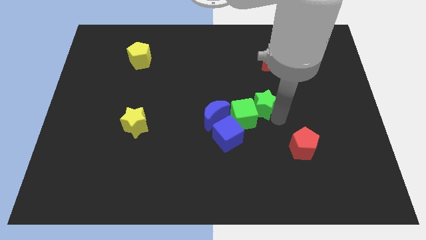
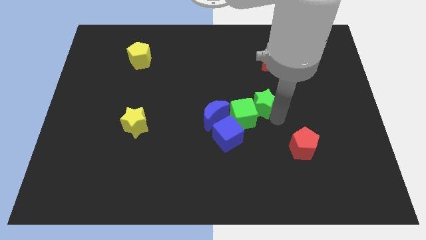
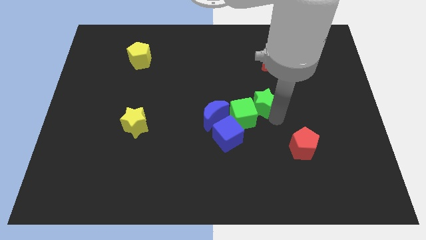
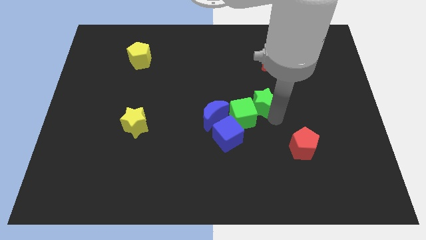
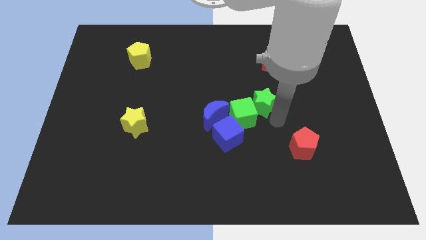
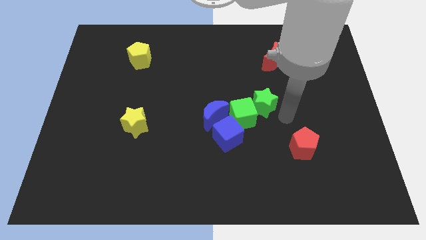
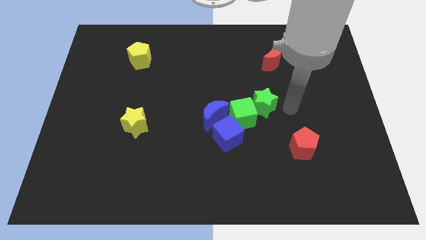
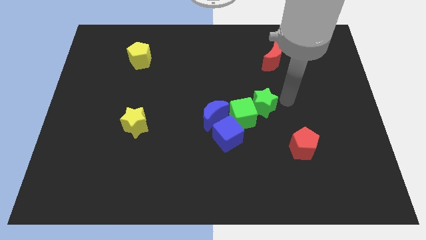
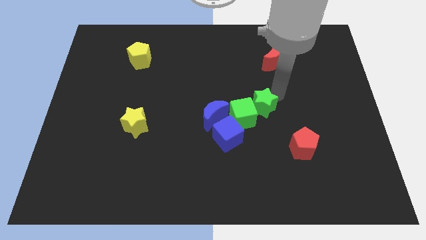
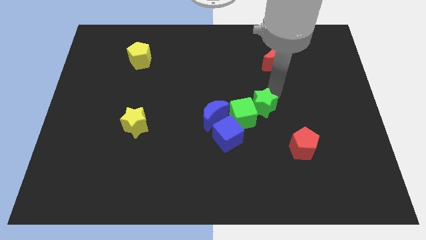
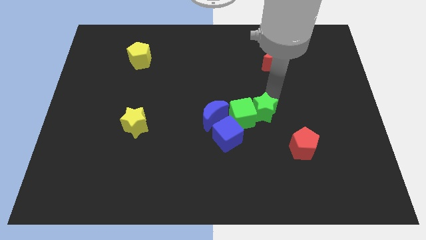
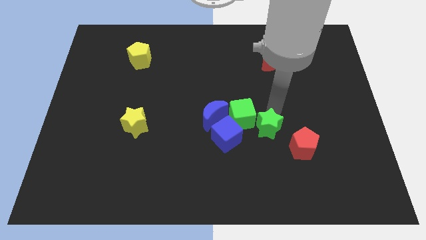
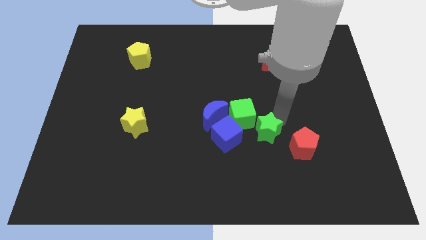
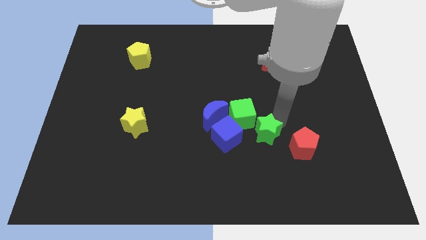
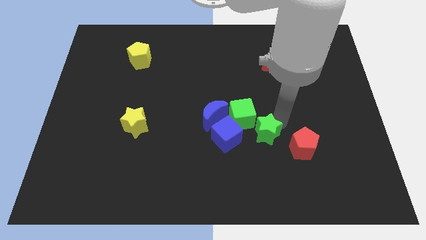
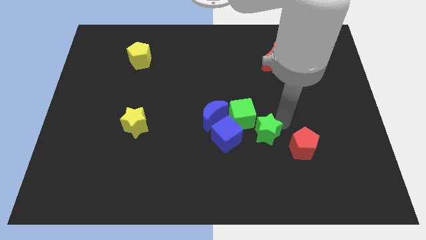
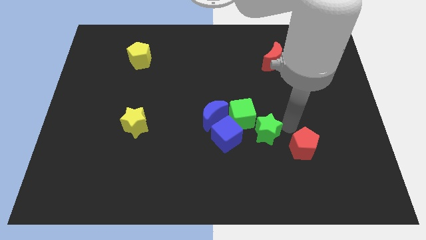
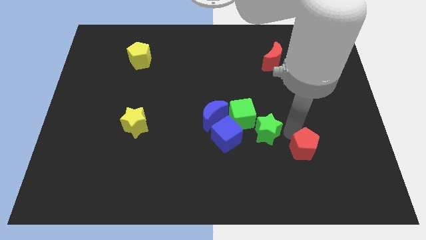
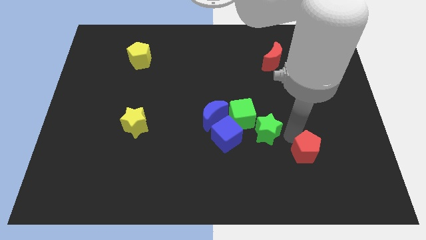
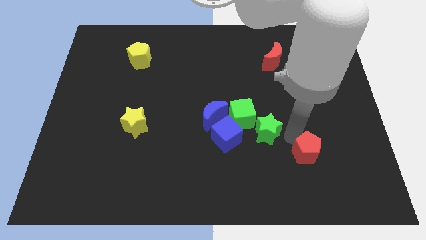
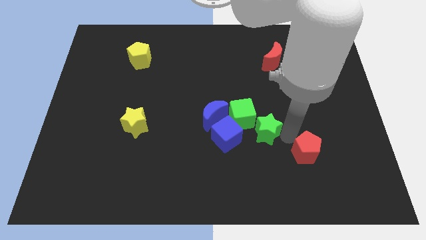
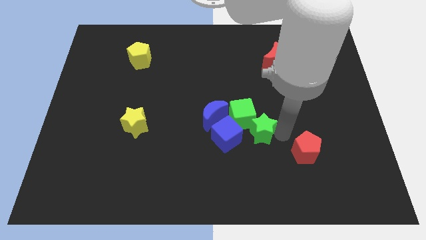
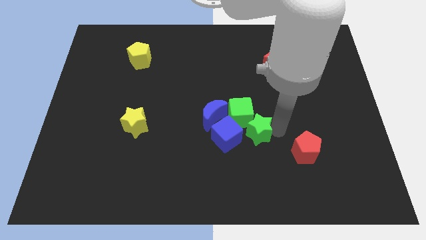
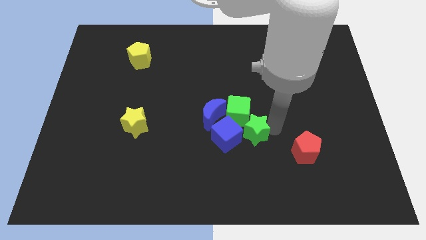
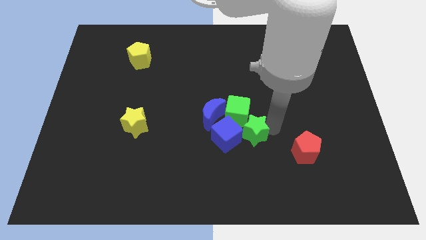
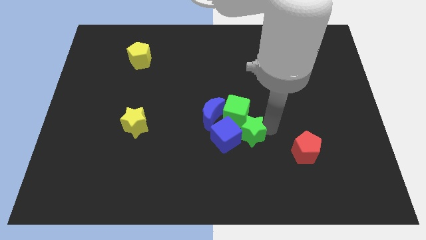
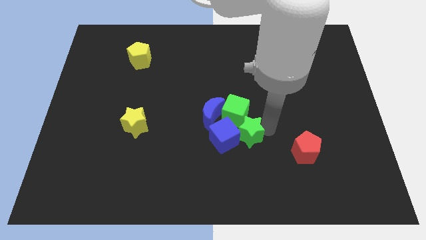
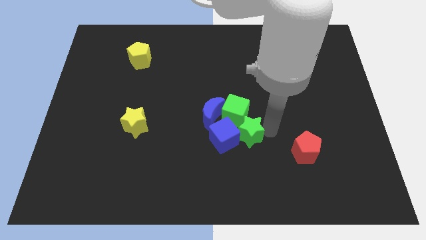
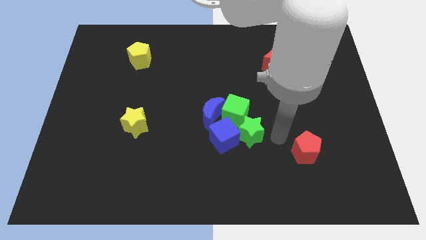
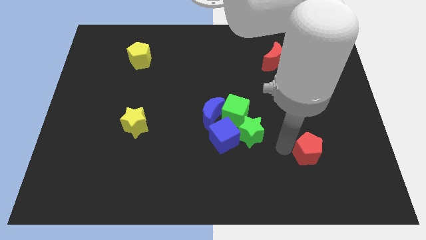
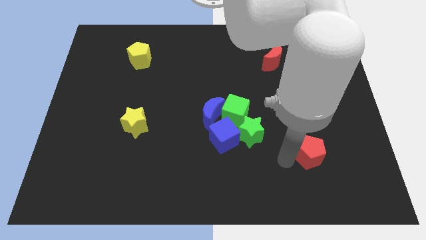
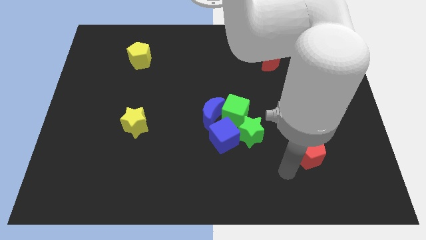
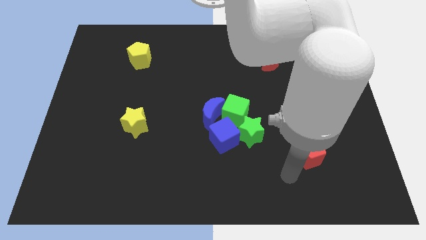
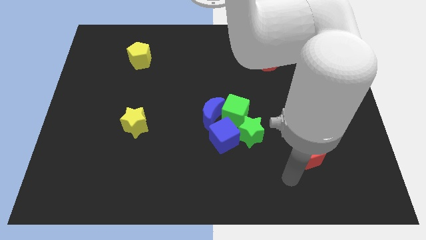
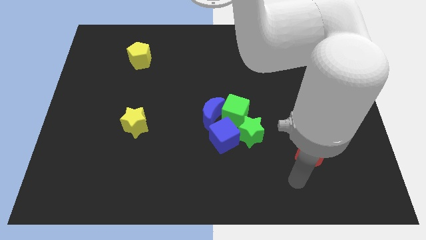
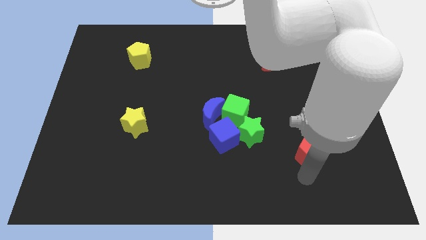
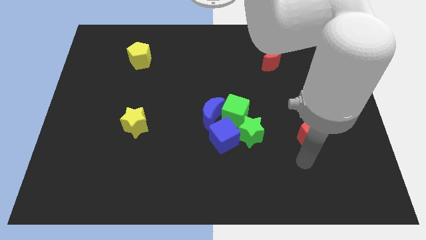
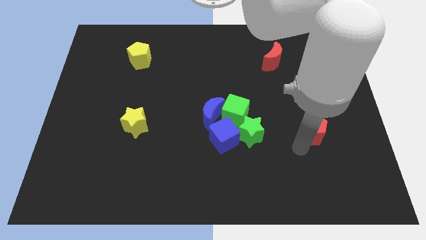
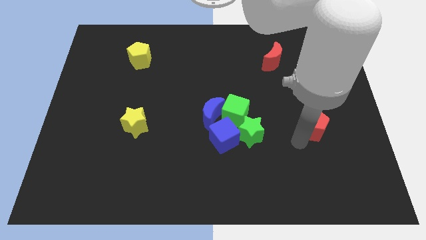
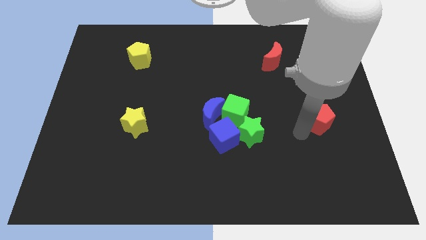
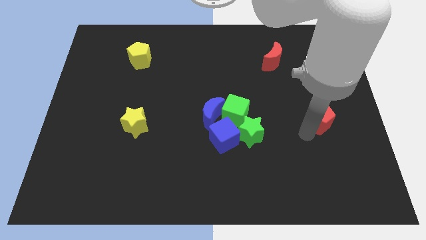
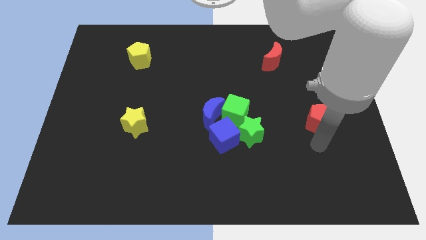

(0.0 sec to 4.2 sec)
move the red pentagon right to the green blocks

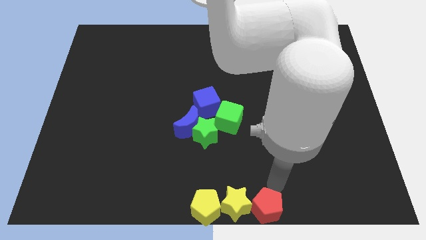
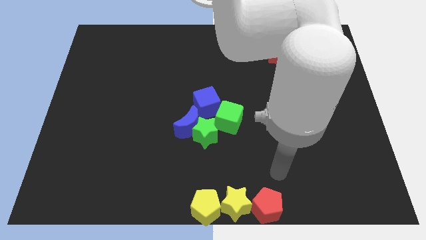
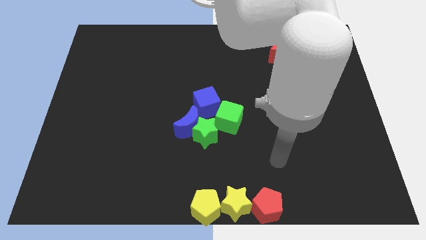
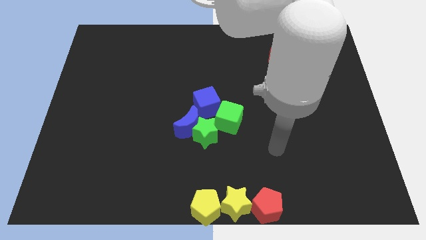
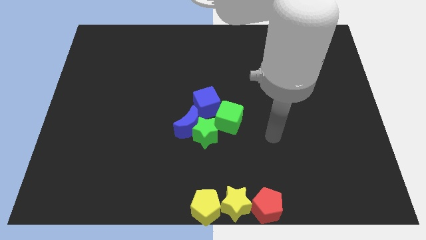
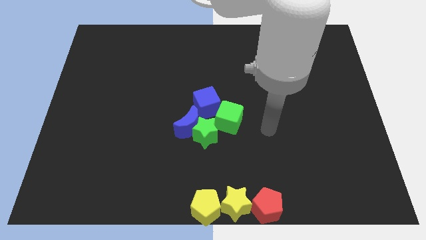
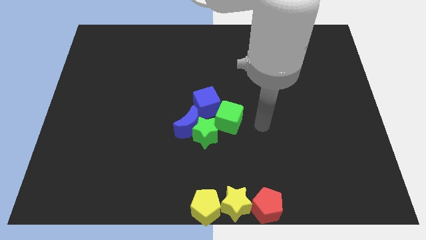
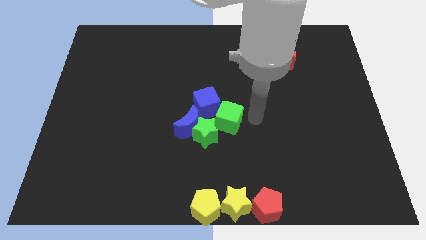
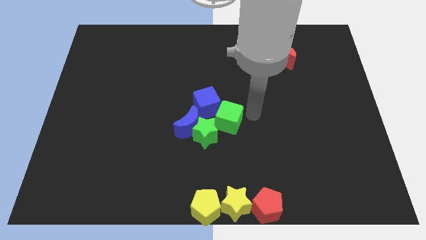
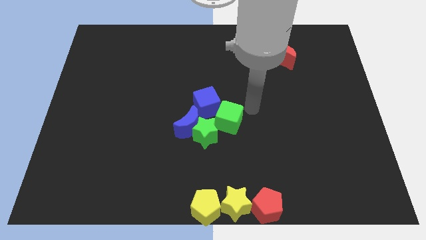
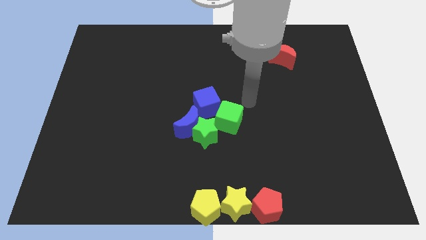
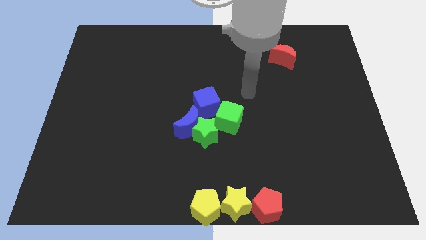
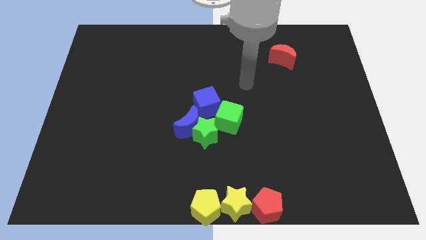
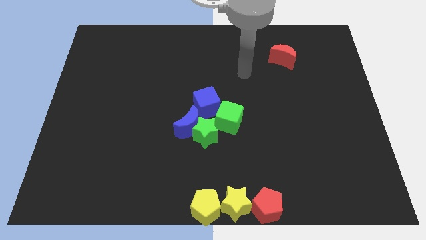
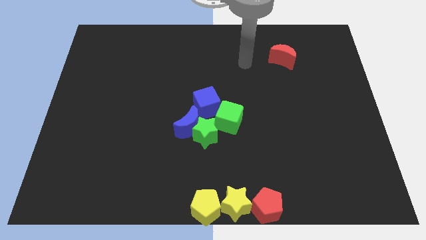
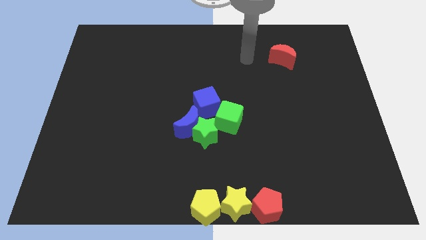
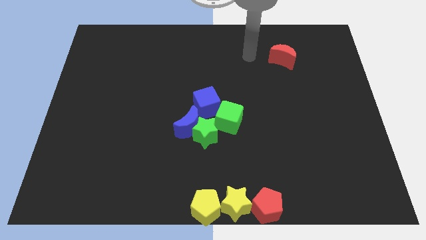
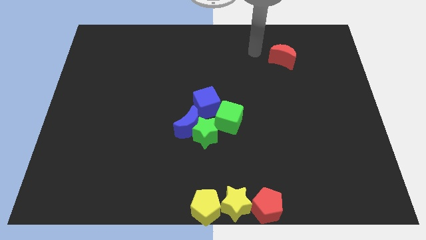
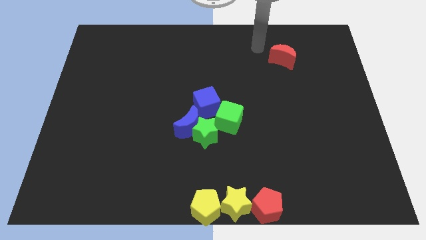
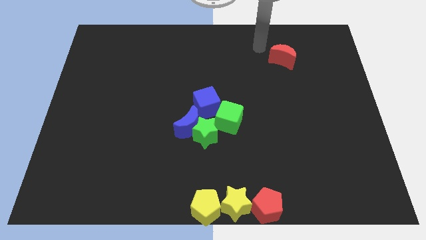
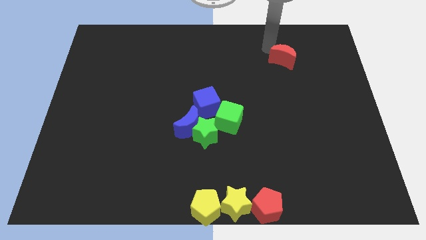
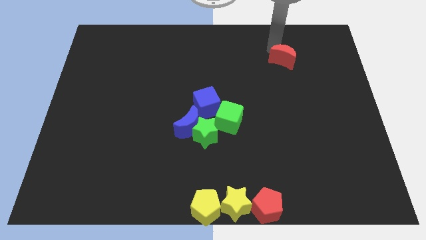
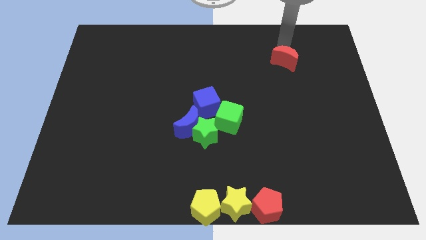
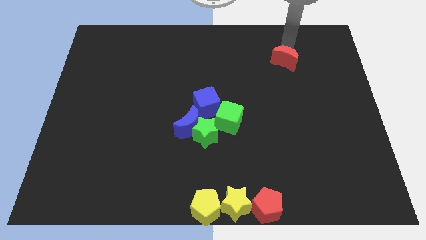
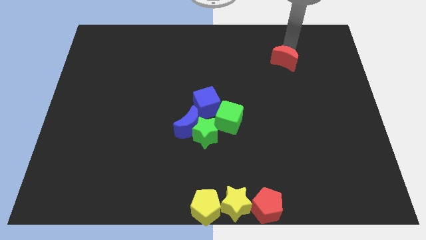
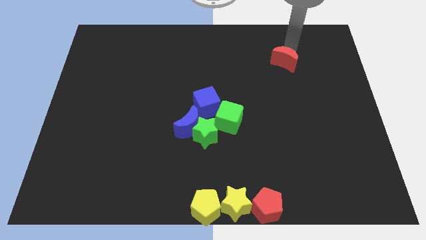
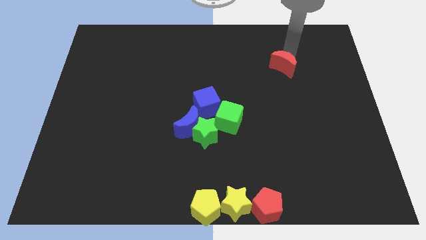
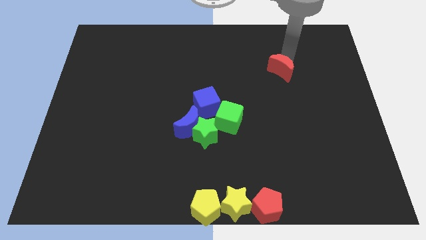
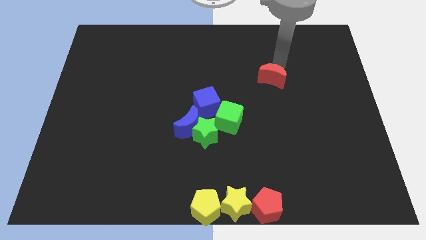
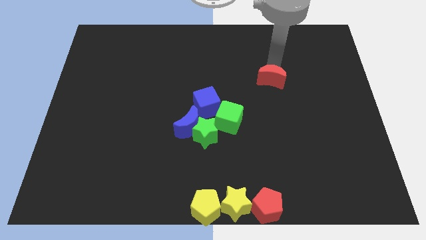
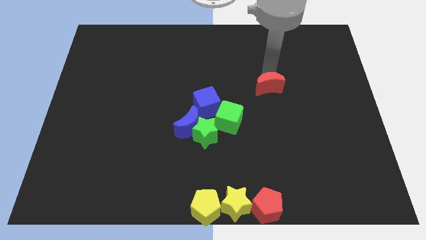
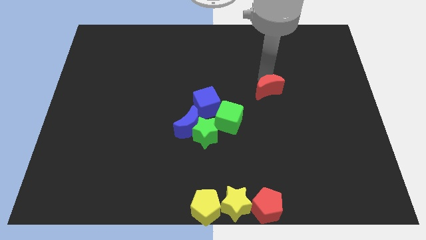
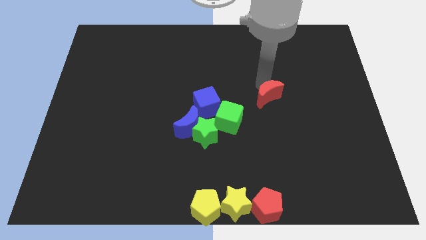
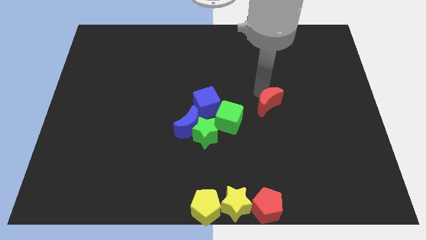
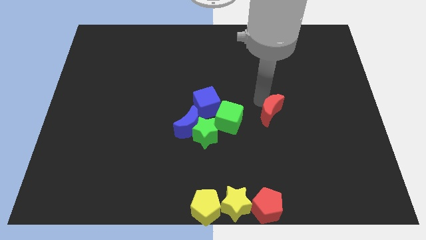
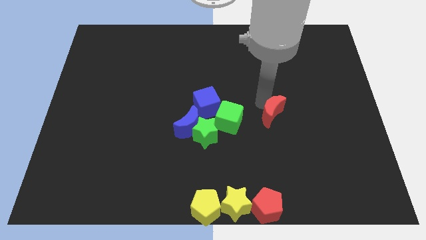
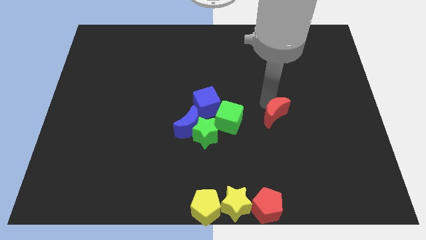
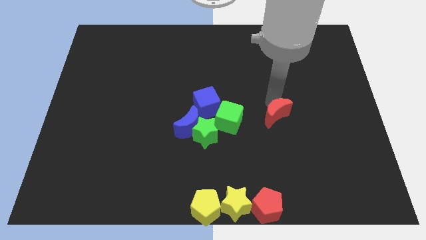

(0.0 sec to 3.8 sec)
move your arm away from the red pentagon

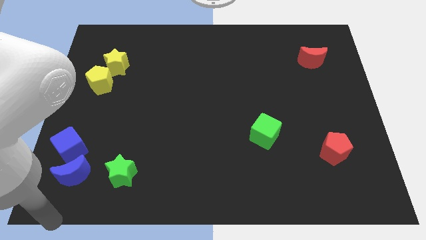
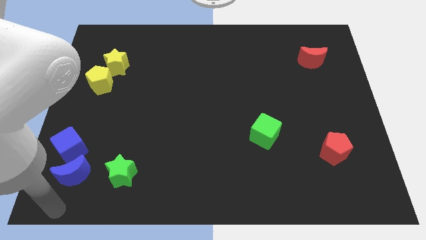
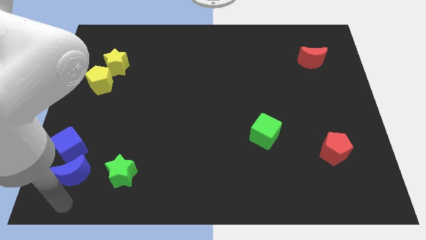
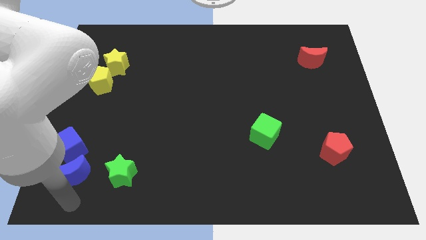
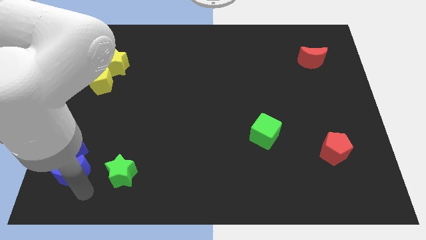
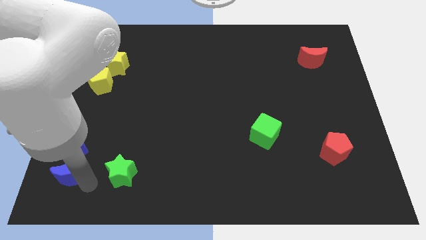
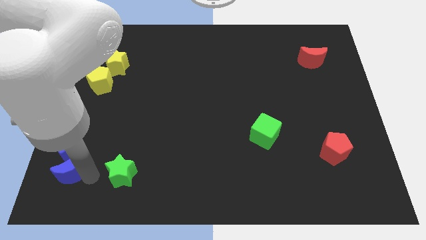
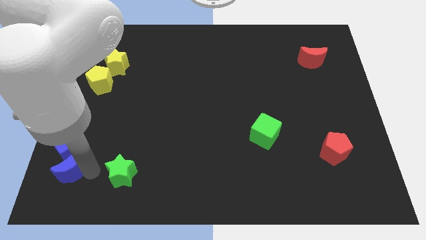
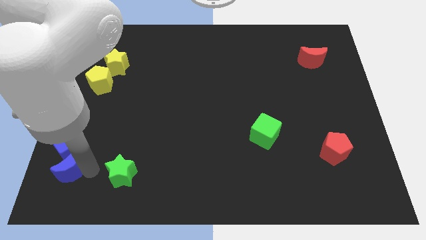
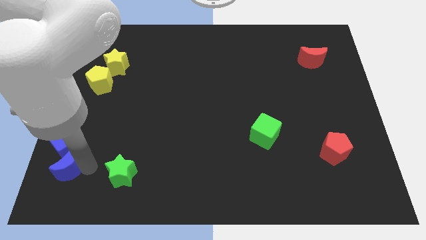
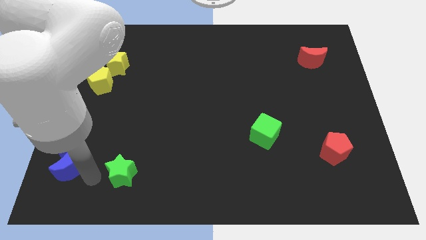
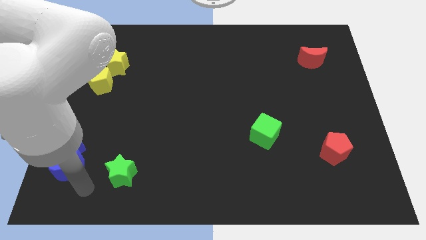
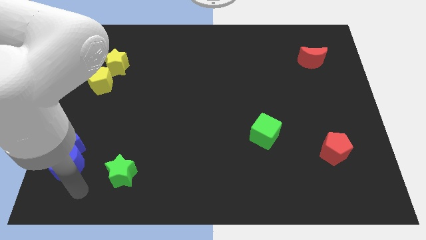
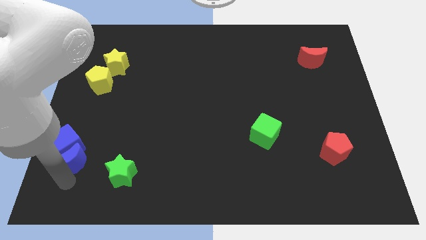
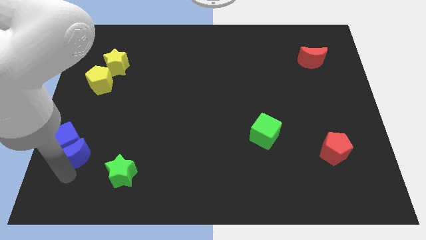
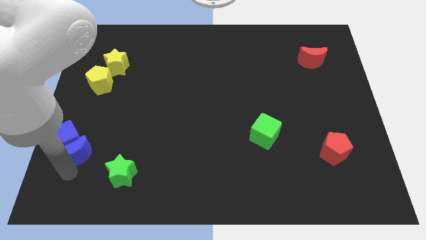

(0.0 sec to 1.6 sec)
push the blue moon into the blue cube
